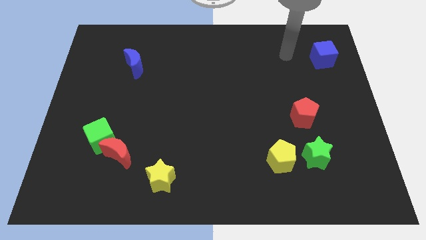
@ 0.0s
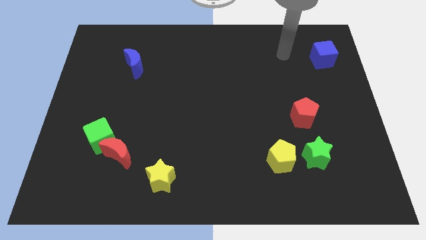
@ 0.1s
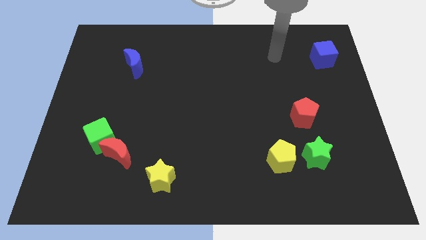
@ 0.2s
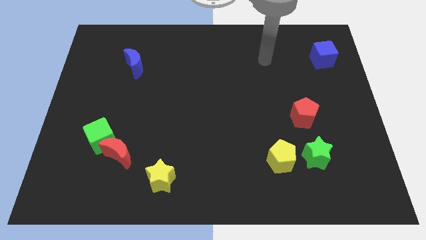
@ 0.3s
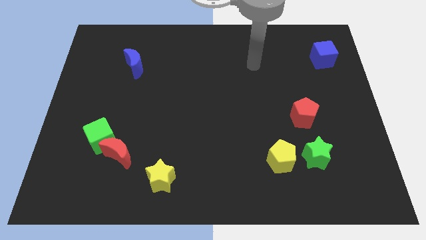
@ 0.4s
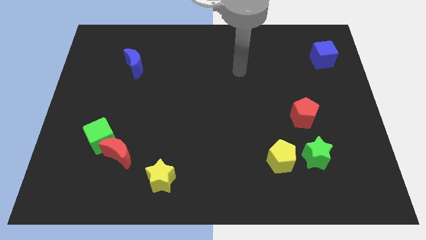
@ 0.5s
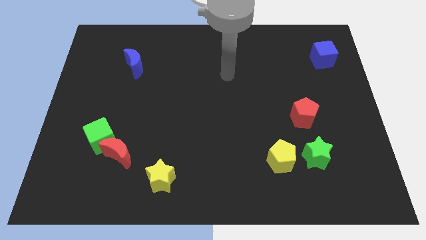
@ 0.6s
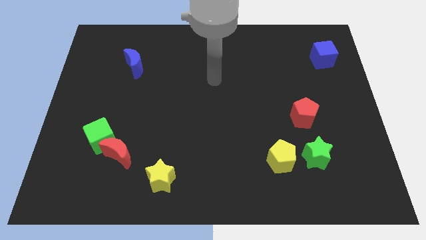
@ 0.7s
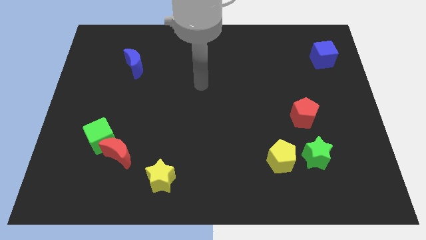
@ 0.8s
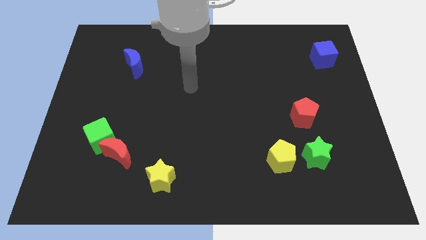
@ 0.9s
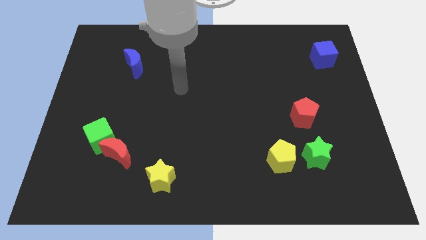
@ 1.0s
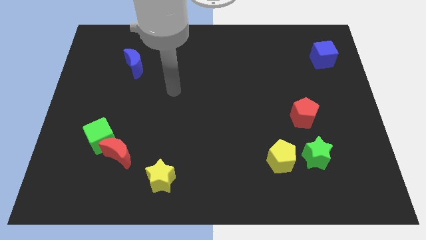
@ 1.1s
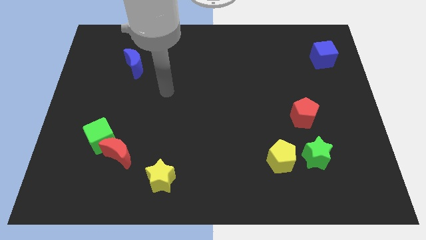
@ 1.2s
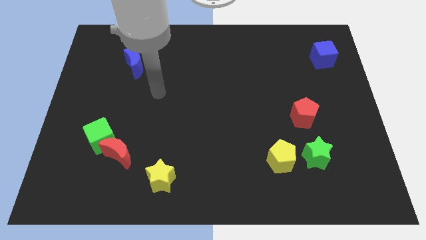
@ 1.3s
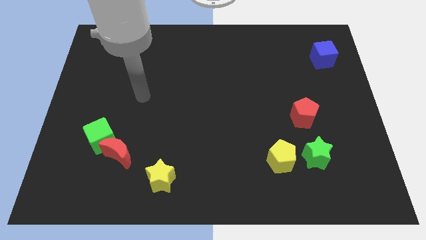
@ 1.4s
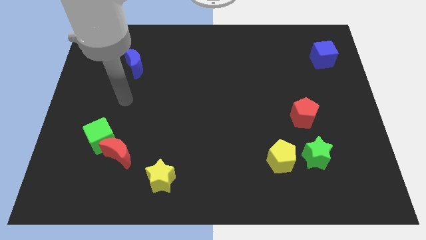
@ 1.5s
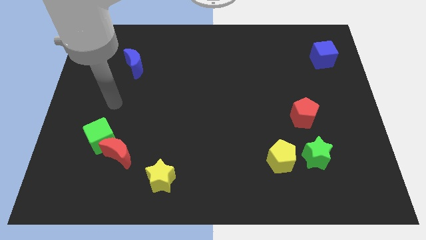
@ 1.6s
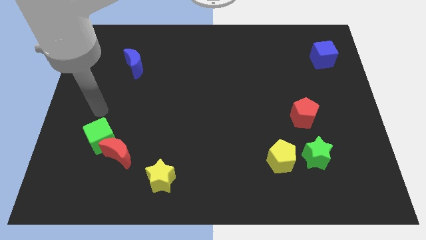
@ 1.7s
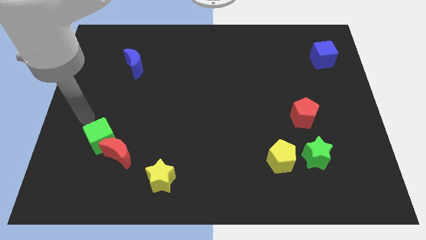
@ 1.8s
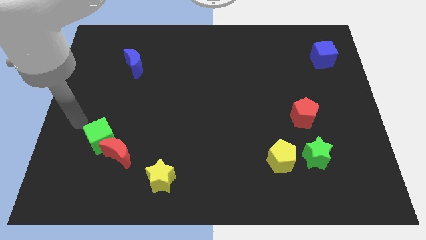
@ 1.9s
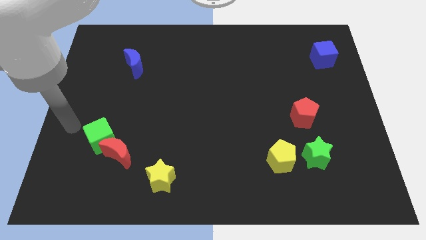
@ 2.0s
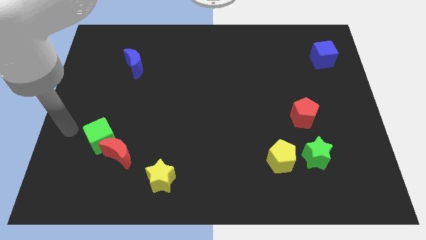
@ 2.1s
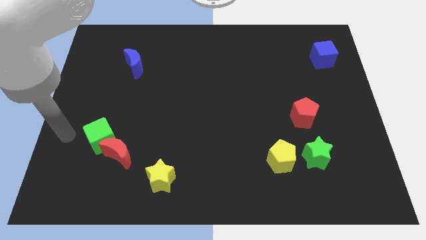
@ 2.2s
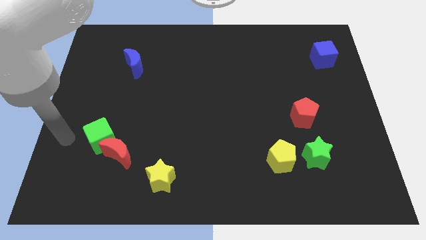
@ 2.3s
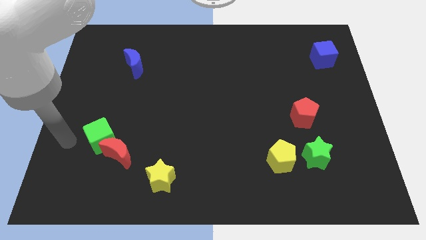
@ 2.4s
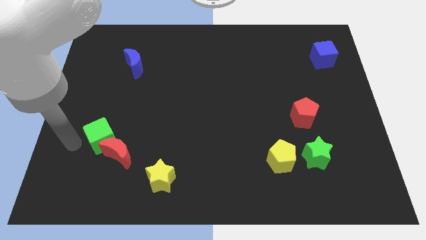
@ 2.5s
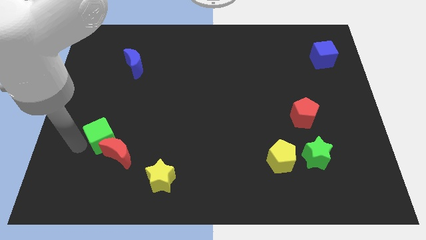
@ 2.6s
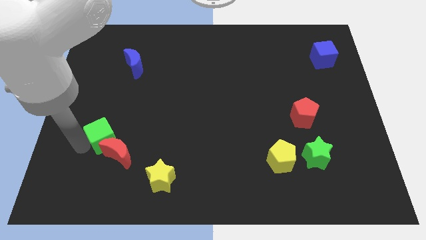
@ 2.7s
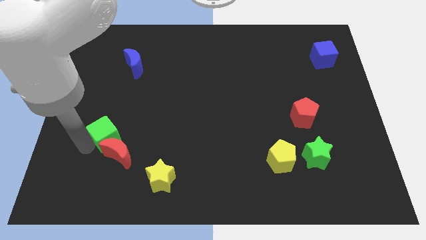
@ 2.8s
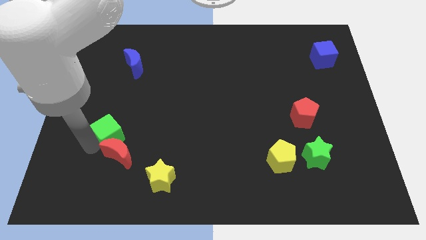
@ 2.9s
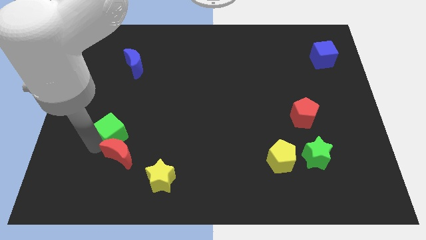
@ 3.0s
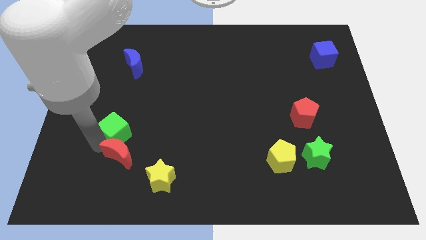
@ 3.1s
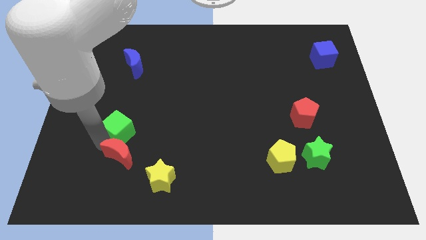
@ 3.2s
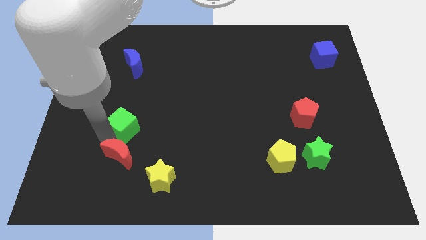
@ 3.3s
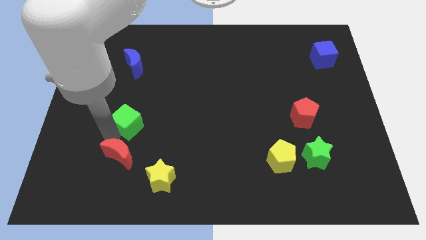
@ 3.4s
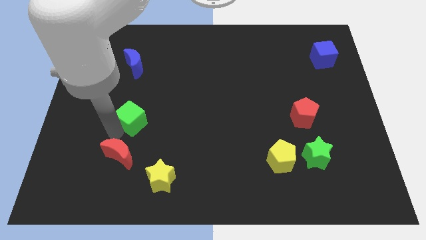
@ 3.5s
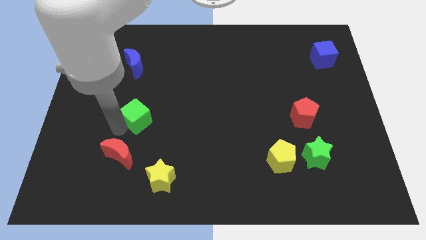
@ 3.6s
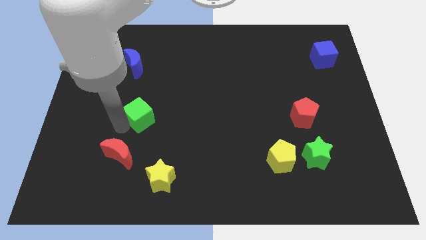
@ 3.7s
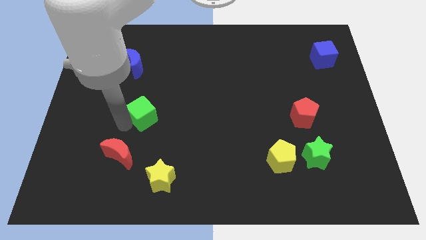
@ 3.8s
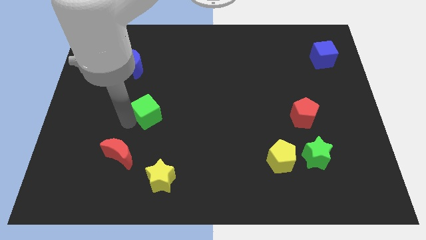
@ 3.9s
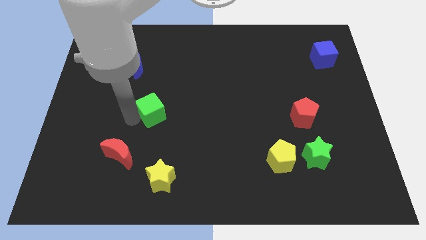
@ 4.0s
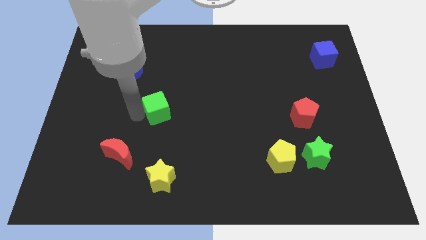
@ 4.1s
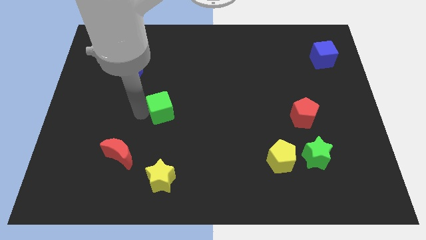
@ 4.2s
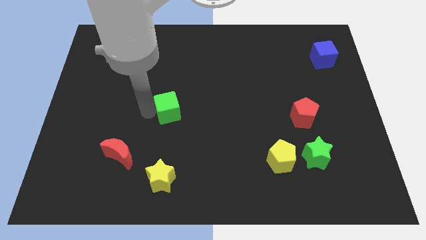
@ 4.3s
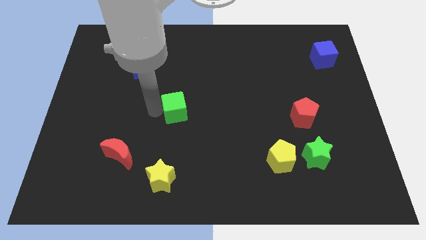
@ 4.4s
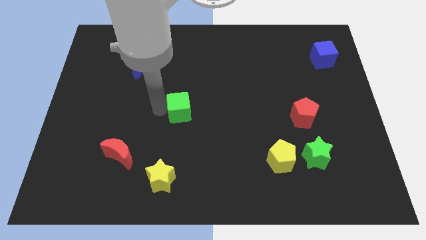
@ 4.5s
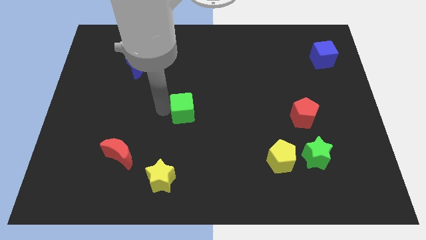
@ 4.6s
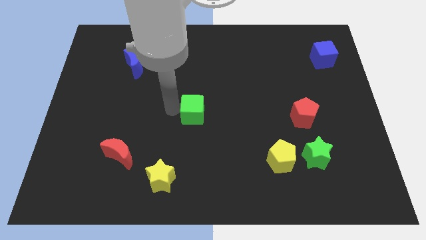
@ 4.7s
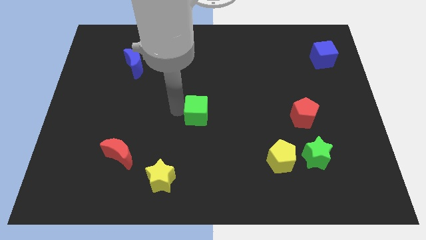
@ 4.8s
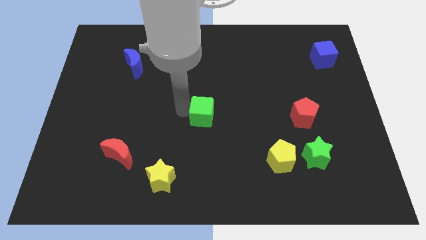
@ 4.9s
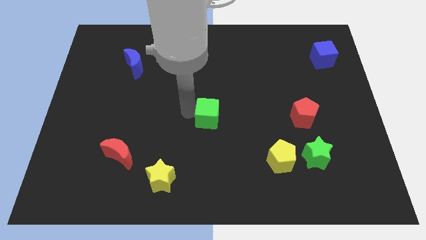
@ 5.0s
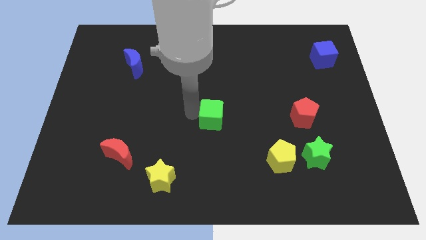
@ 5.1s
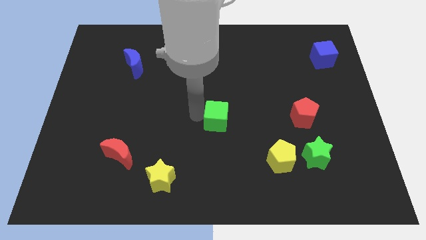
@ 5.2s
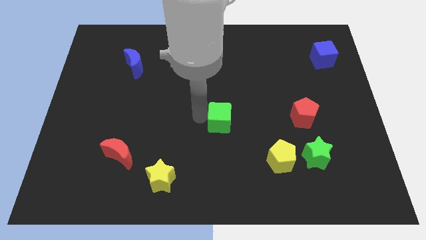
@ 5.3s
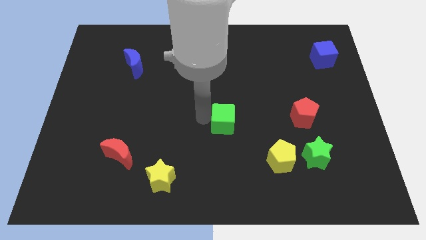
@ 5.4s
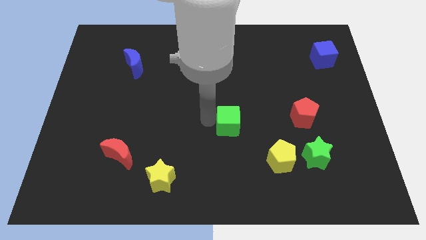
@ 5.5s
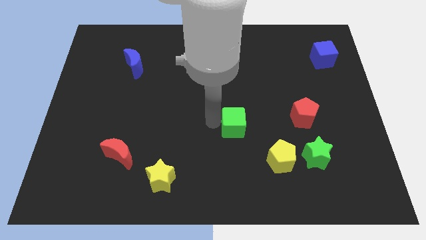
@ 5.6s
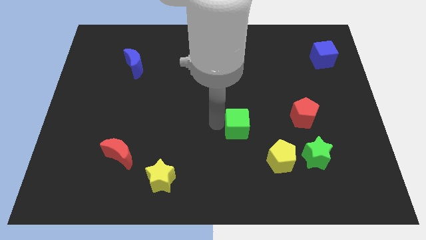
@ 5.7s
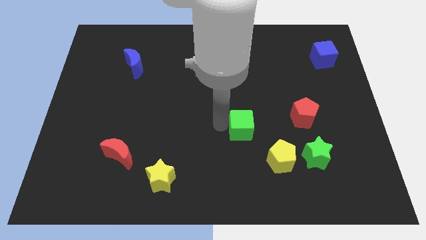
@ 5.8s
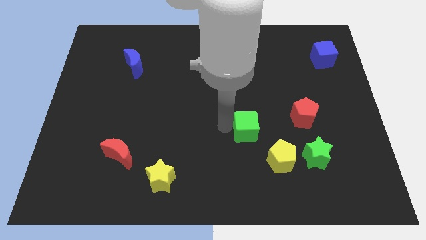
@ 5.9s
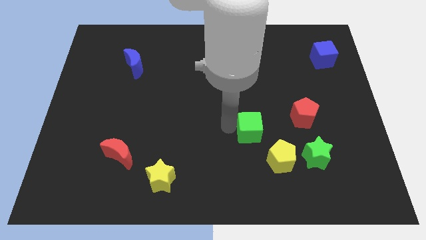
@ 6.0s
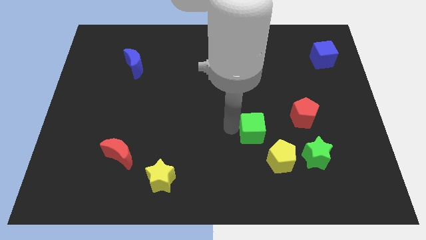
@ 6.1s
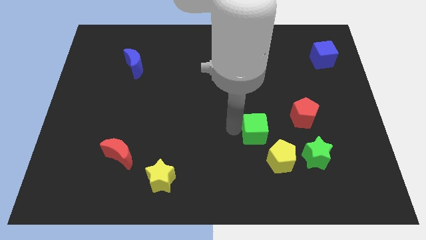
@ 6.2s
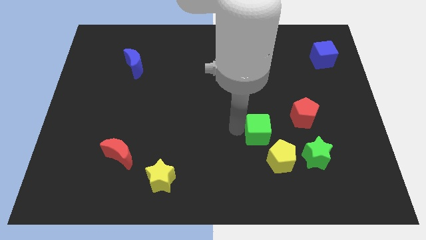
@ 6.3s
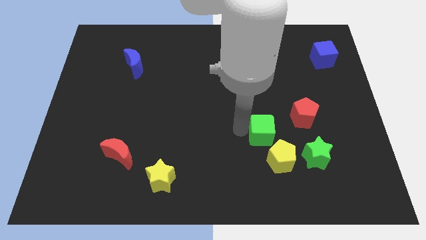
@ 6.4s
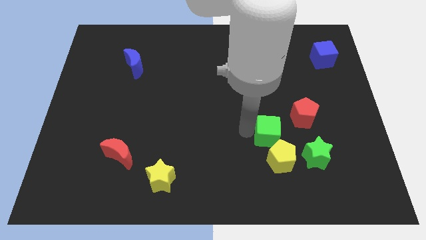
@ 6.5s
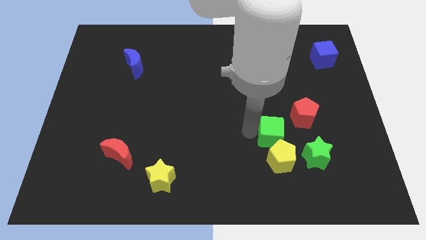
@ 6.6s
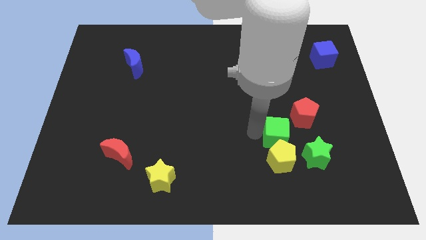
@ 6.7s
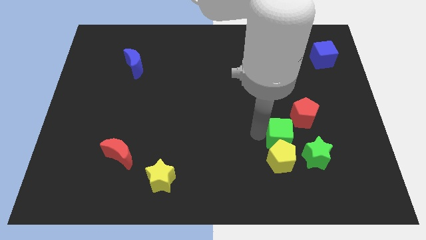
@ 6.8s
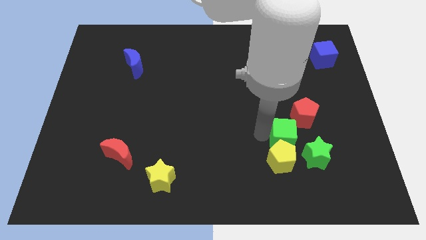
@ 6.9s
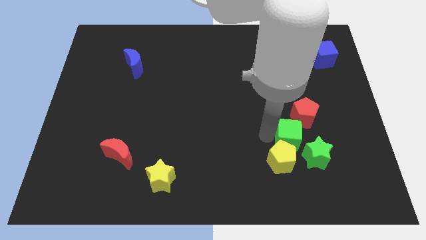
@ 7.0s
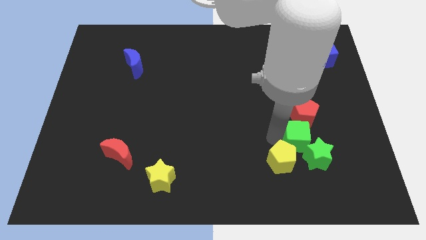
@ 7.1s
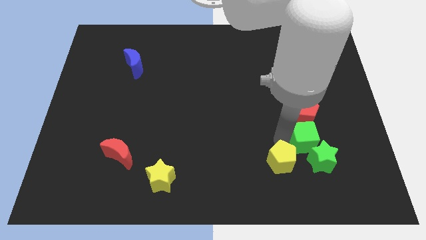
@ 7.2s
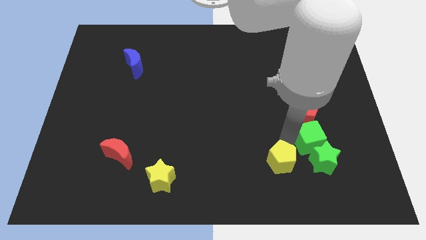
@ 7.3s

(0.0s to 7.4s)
slide the green cube to the green star

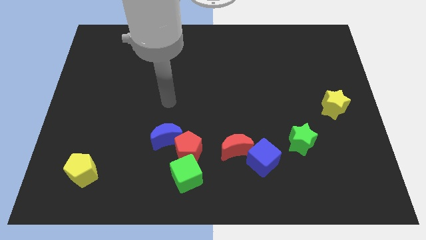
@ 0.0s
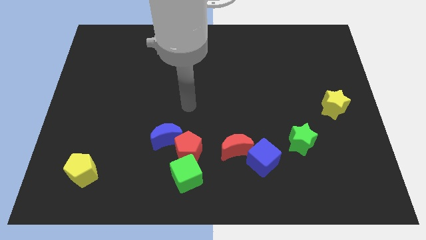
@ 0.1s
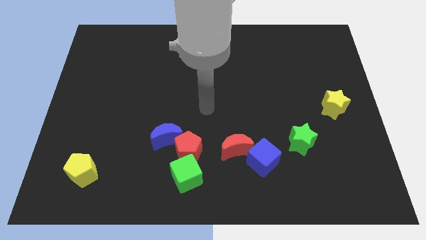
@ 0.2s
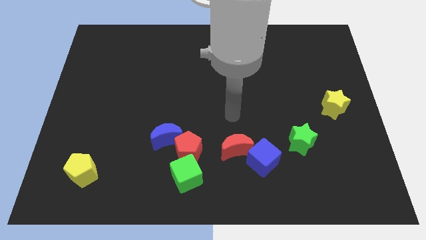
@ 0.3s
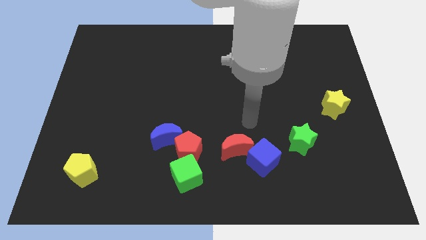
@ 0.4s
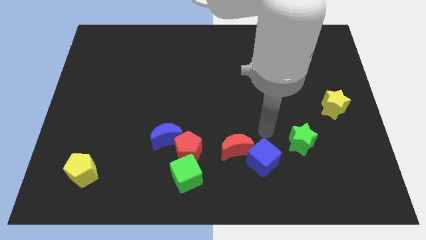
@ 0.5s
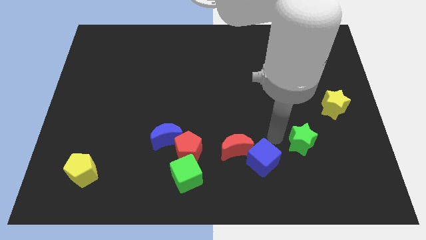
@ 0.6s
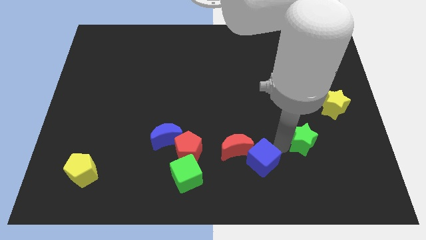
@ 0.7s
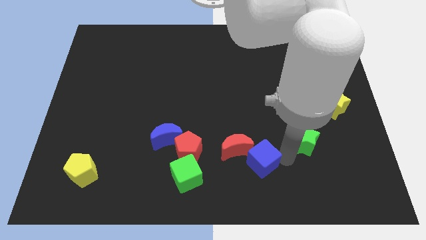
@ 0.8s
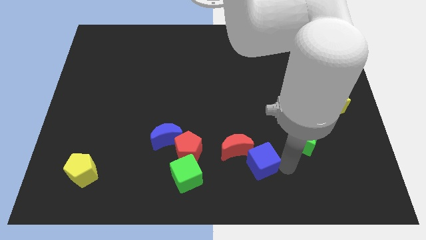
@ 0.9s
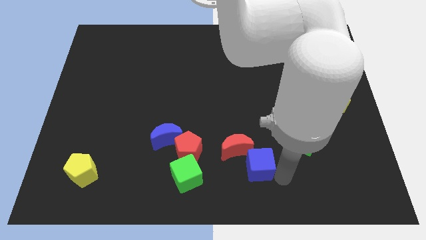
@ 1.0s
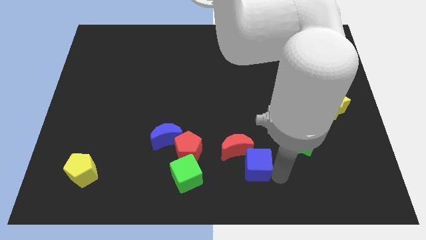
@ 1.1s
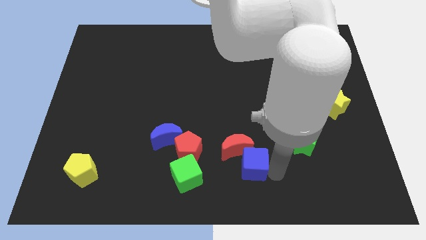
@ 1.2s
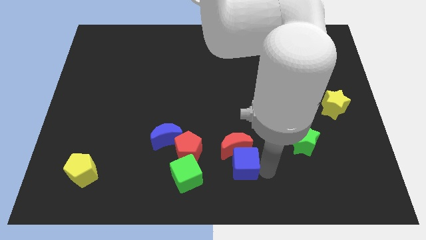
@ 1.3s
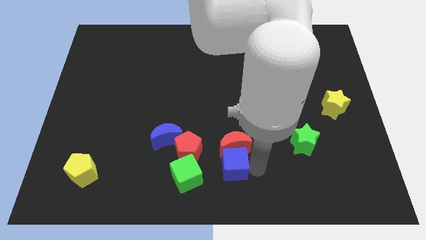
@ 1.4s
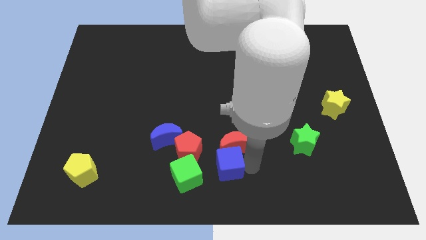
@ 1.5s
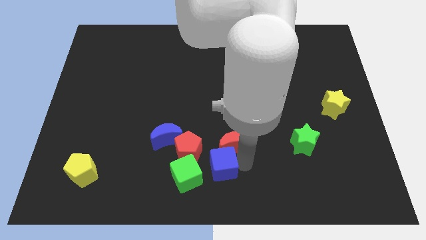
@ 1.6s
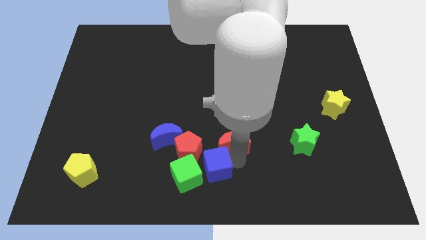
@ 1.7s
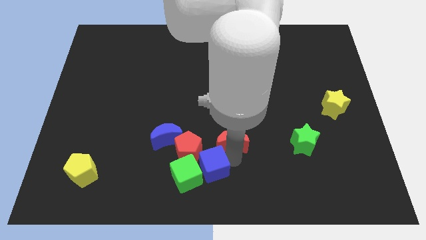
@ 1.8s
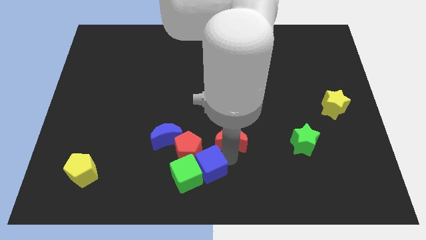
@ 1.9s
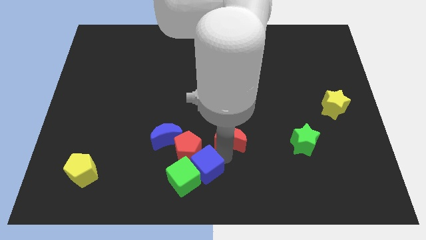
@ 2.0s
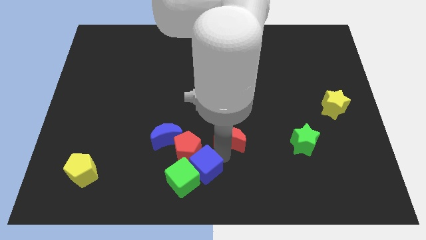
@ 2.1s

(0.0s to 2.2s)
slide the blue cube close to the red pentagon
